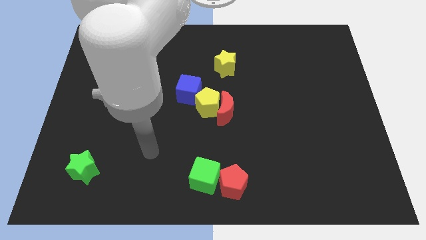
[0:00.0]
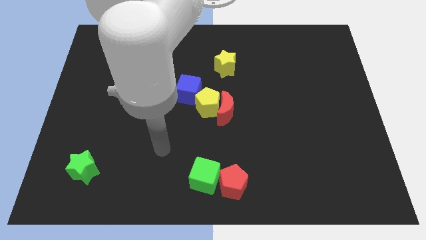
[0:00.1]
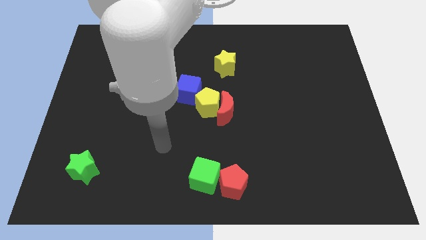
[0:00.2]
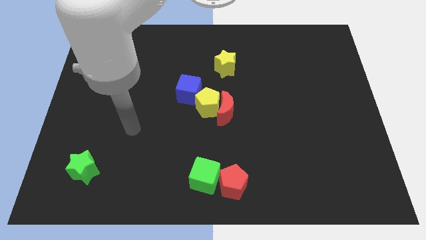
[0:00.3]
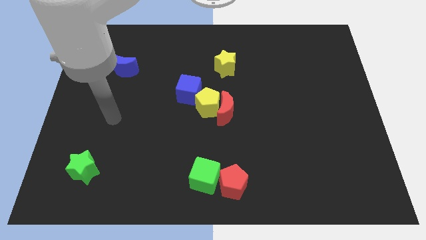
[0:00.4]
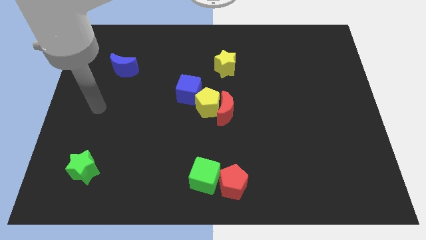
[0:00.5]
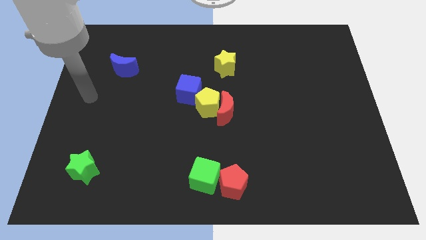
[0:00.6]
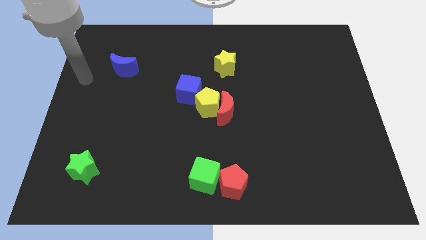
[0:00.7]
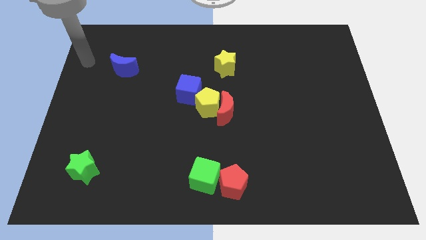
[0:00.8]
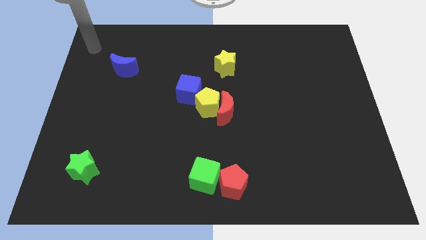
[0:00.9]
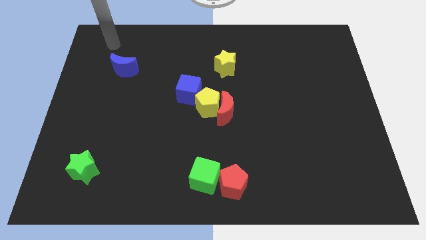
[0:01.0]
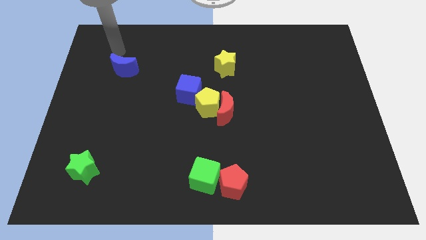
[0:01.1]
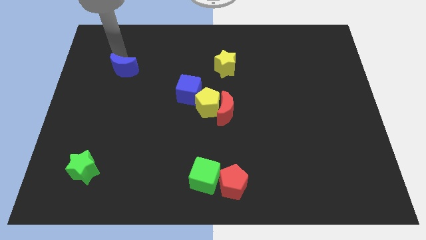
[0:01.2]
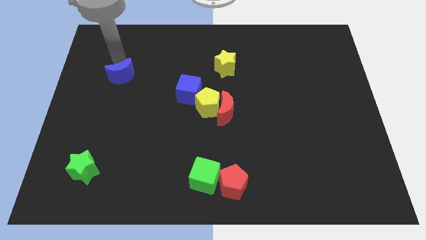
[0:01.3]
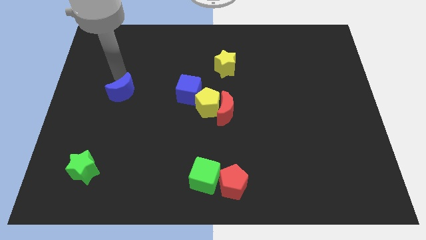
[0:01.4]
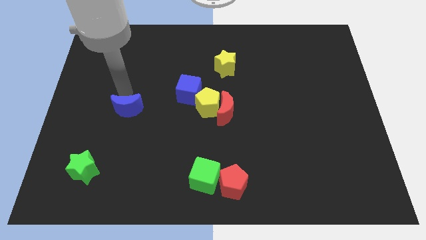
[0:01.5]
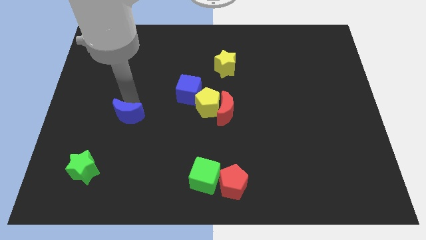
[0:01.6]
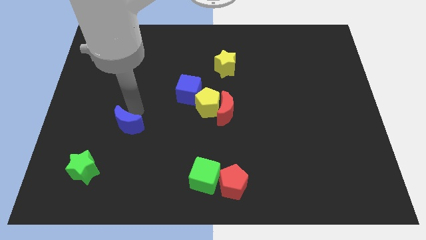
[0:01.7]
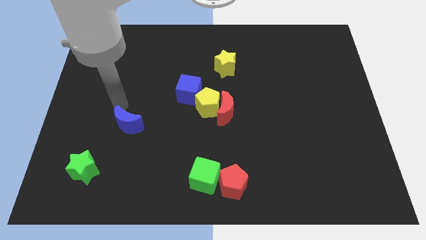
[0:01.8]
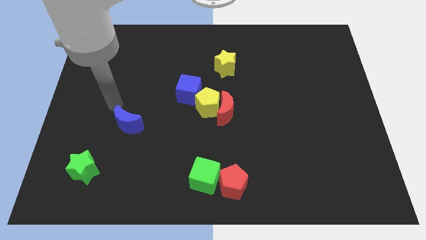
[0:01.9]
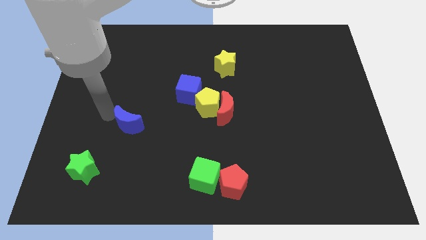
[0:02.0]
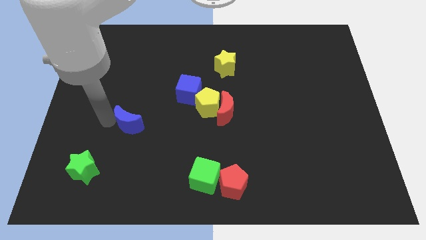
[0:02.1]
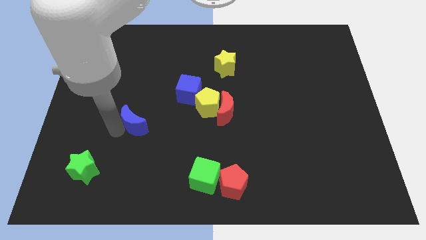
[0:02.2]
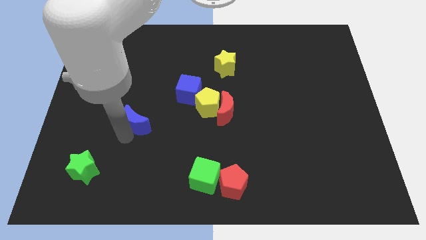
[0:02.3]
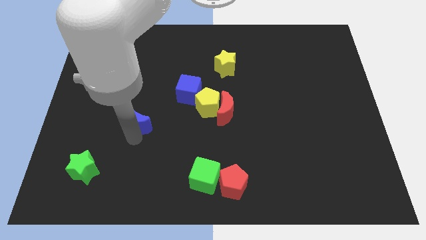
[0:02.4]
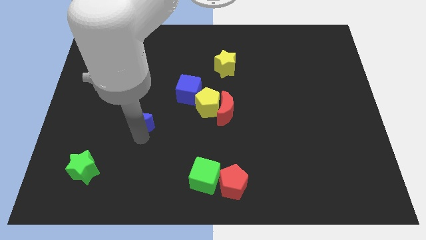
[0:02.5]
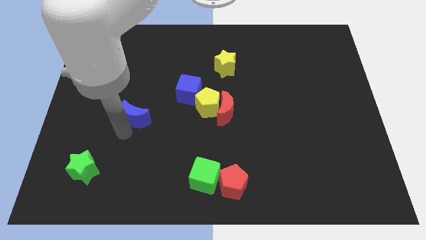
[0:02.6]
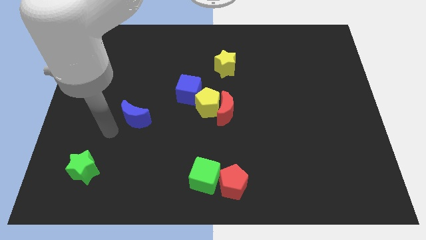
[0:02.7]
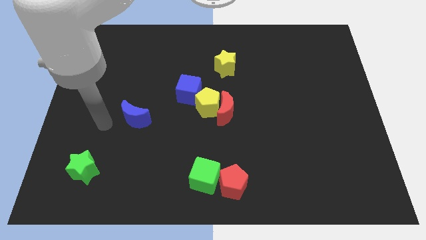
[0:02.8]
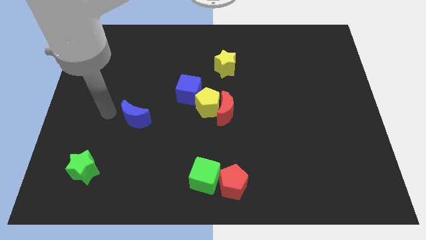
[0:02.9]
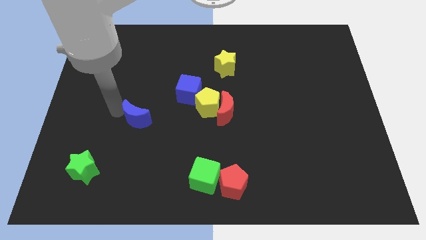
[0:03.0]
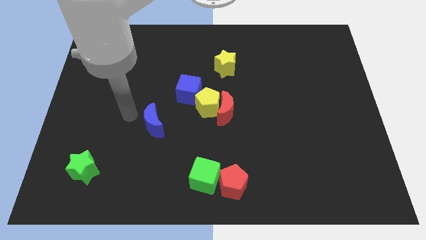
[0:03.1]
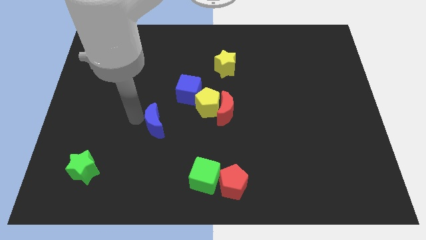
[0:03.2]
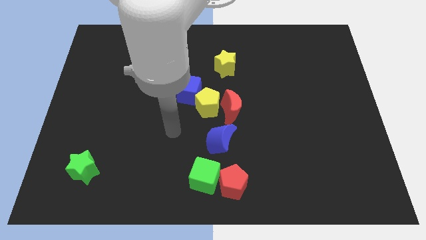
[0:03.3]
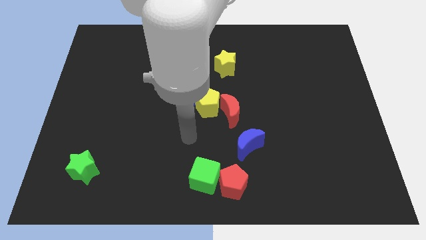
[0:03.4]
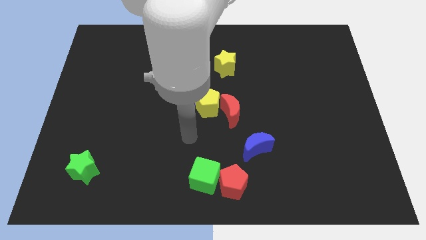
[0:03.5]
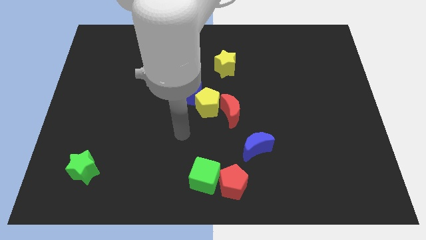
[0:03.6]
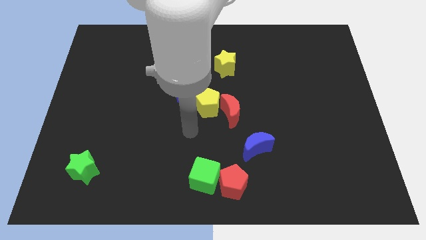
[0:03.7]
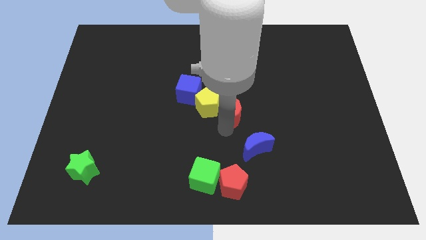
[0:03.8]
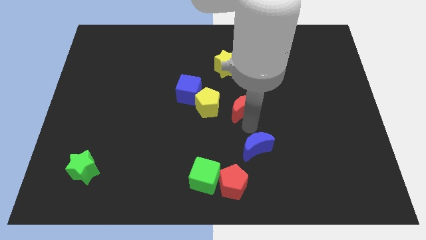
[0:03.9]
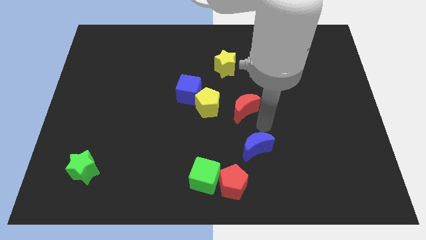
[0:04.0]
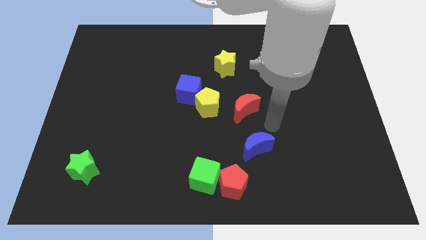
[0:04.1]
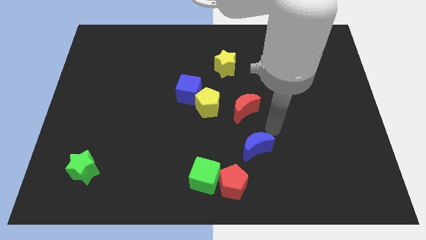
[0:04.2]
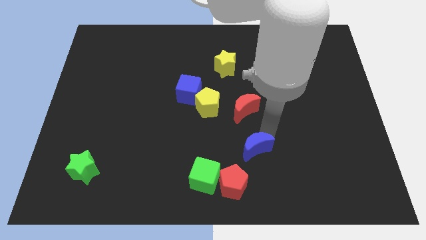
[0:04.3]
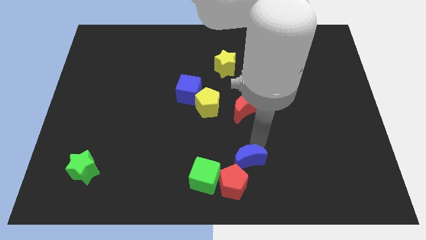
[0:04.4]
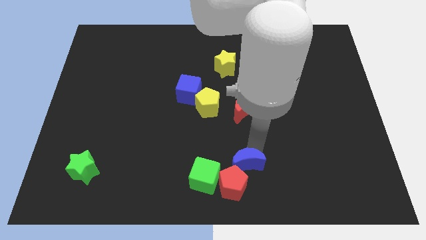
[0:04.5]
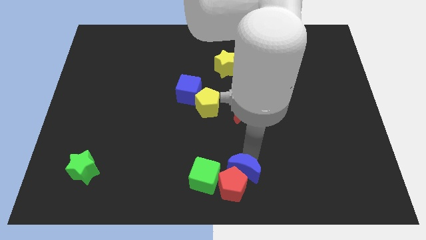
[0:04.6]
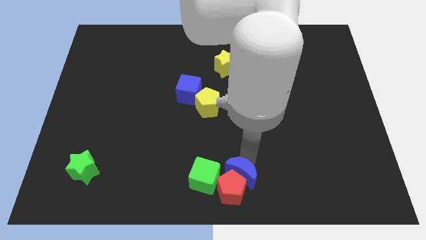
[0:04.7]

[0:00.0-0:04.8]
push the blue moon towards the red pentagon

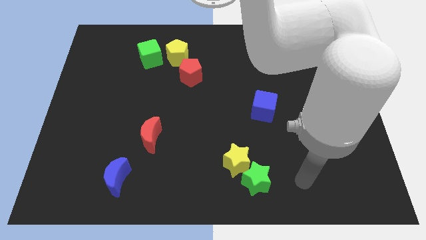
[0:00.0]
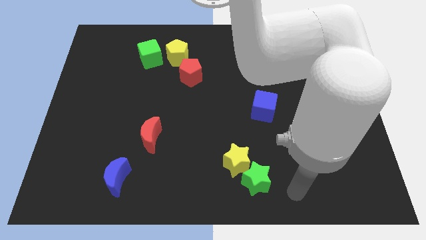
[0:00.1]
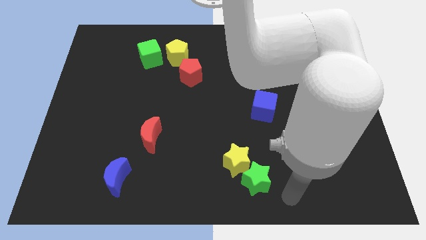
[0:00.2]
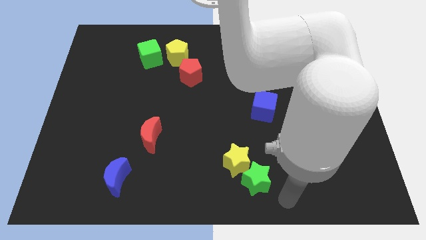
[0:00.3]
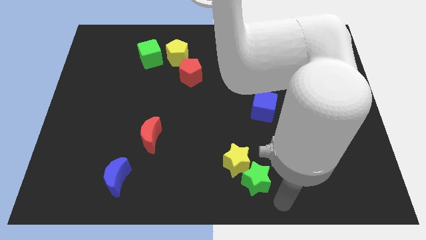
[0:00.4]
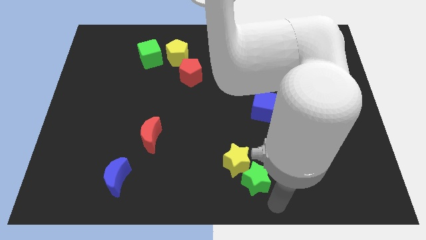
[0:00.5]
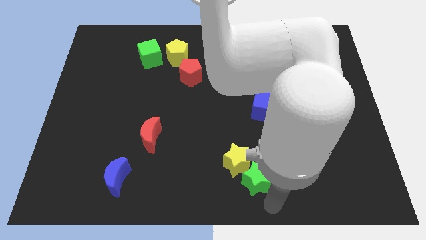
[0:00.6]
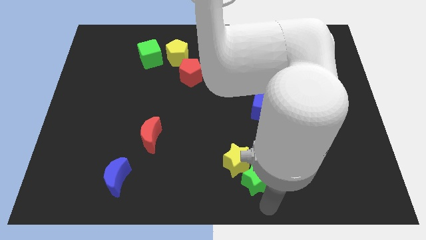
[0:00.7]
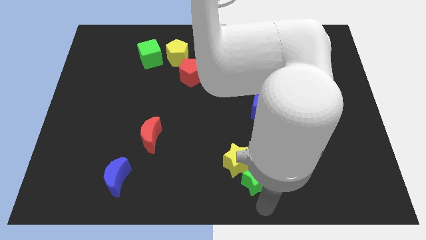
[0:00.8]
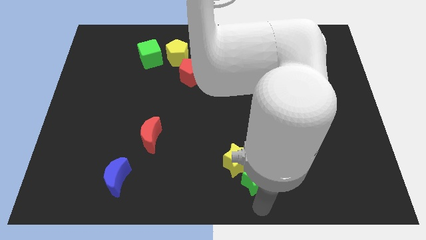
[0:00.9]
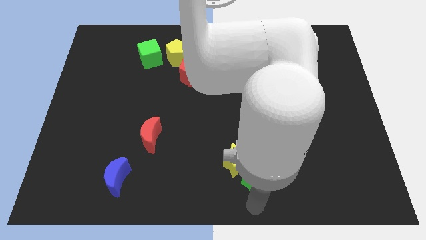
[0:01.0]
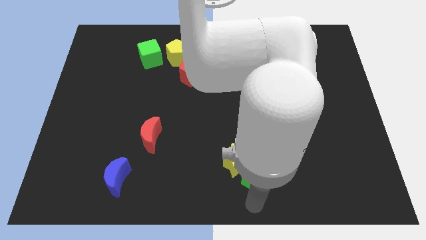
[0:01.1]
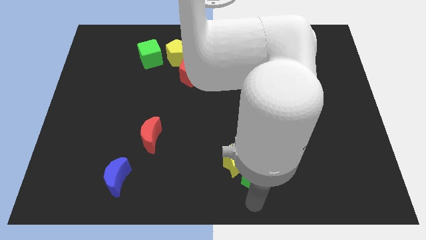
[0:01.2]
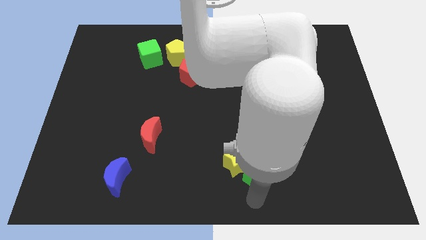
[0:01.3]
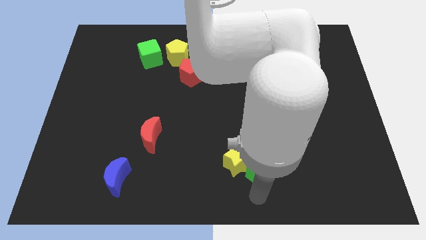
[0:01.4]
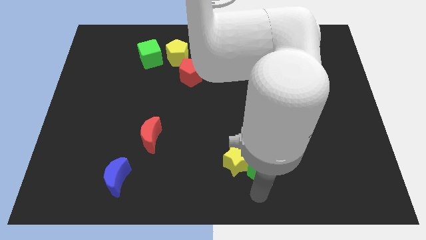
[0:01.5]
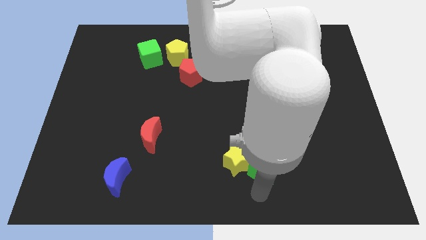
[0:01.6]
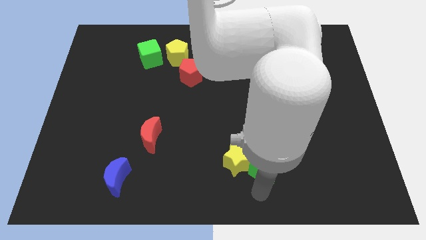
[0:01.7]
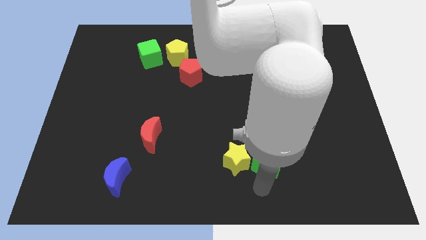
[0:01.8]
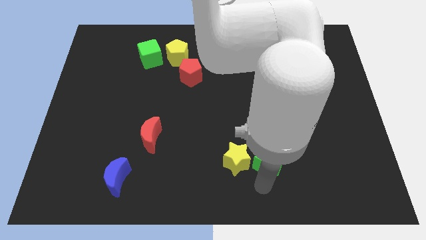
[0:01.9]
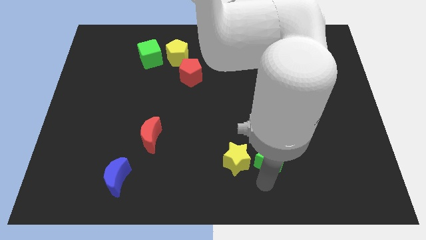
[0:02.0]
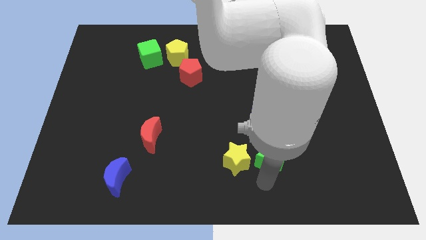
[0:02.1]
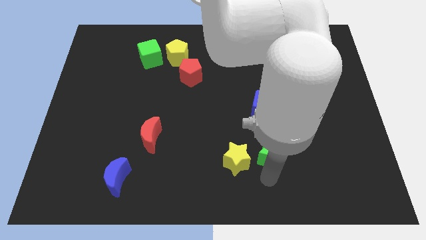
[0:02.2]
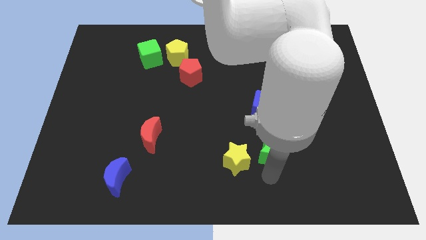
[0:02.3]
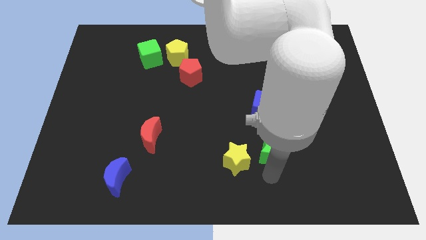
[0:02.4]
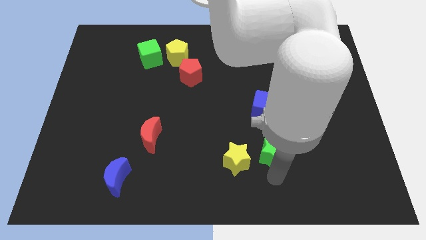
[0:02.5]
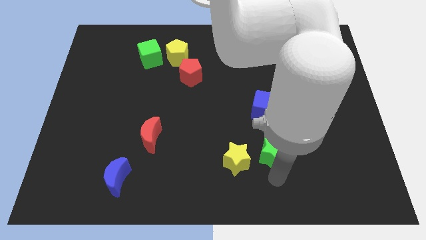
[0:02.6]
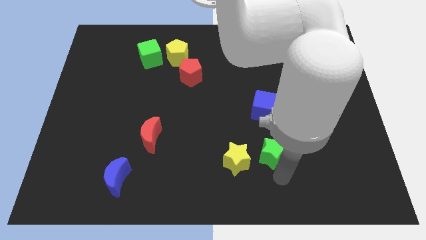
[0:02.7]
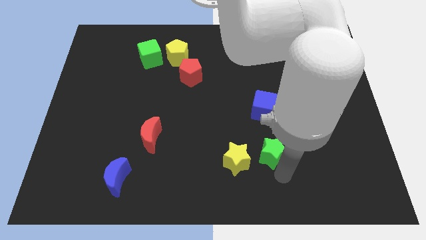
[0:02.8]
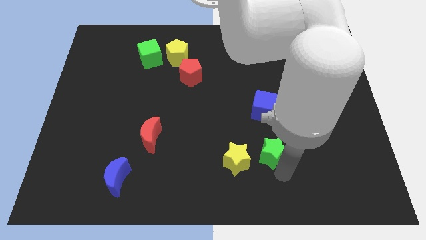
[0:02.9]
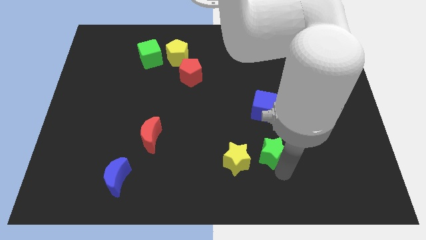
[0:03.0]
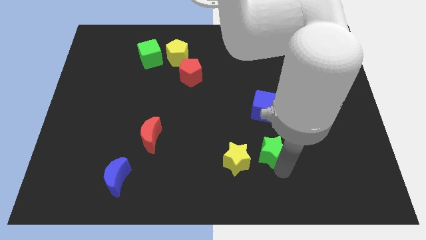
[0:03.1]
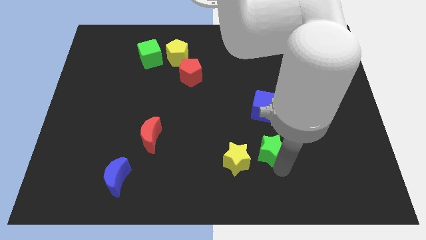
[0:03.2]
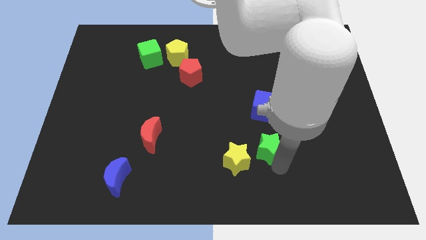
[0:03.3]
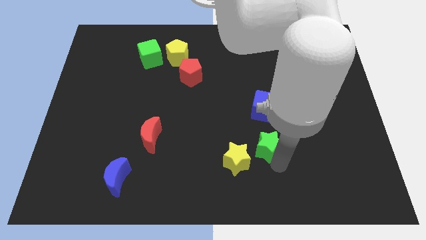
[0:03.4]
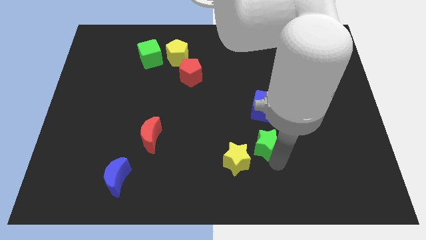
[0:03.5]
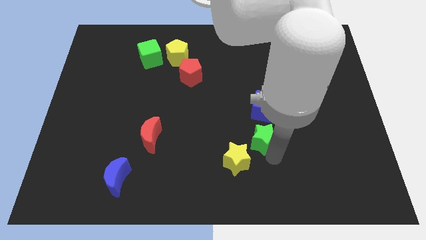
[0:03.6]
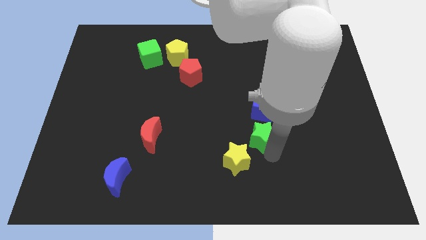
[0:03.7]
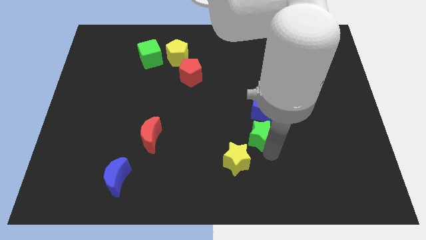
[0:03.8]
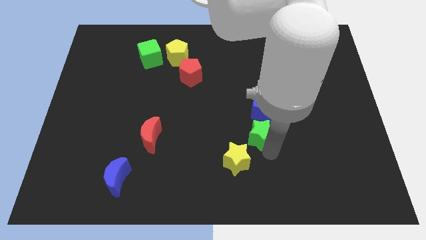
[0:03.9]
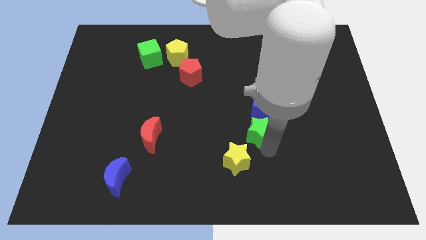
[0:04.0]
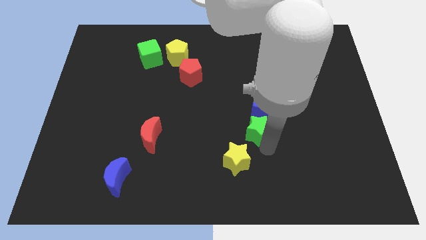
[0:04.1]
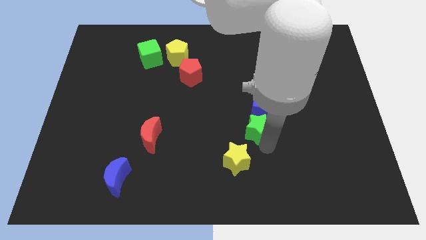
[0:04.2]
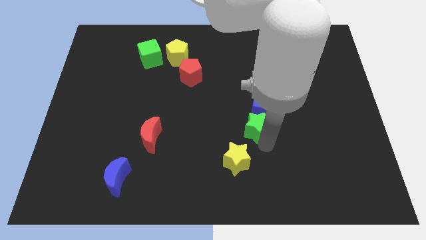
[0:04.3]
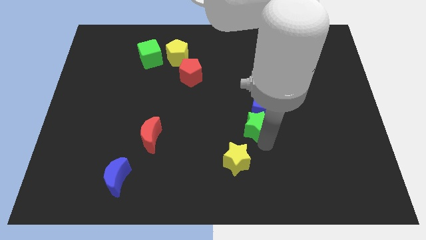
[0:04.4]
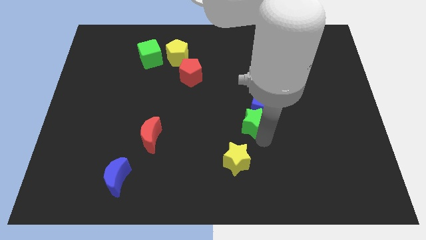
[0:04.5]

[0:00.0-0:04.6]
slide the green star close to the blue cube
